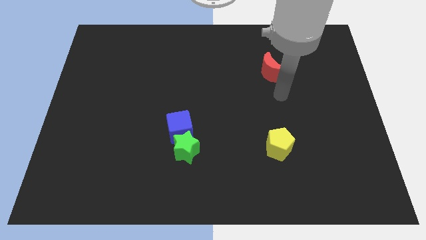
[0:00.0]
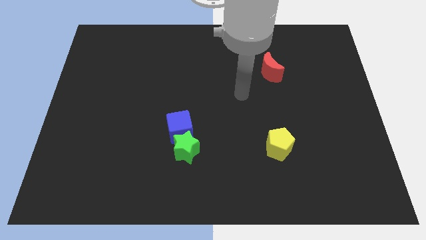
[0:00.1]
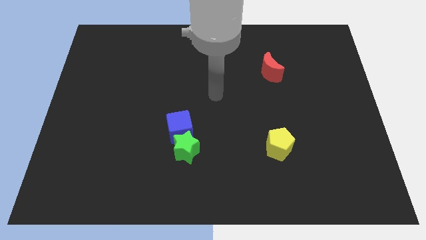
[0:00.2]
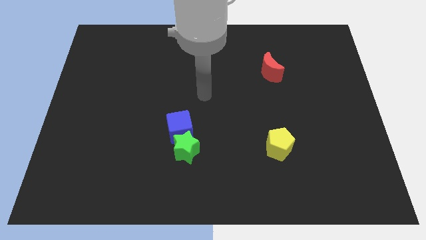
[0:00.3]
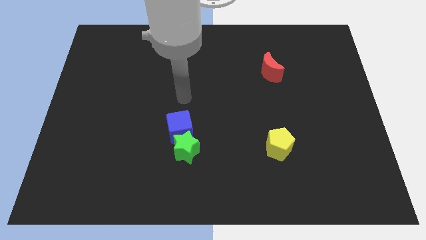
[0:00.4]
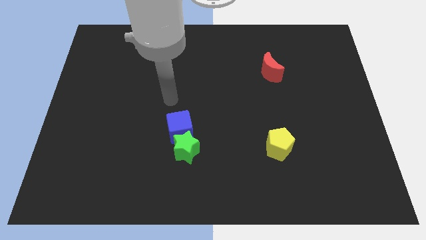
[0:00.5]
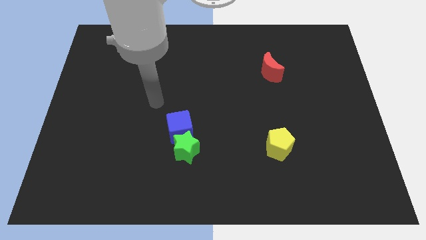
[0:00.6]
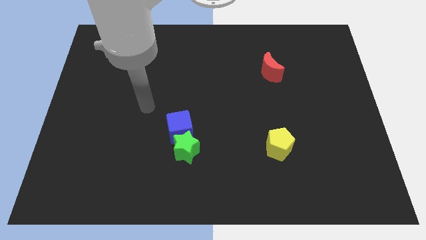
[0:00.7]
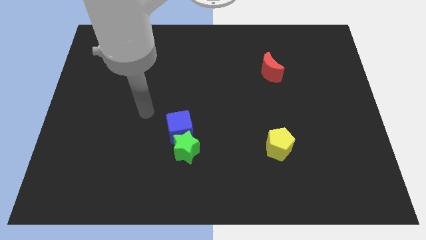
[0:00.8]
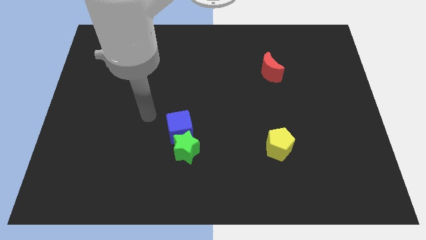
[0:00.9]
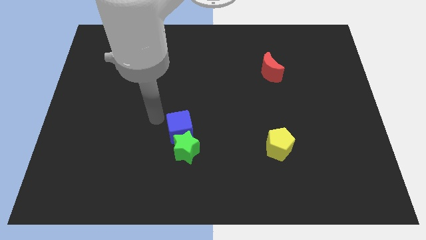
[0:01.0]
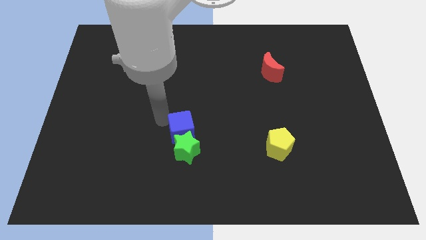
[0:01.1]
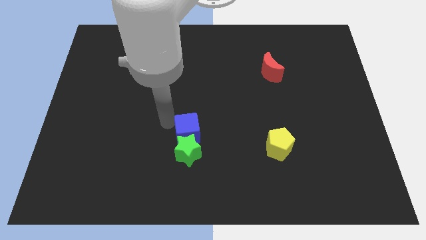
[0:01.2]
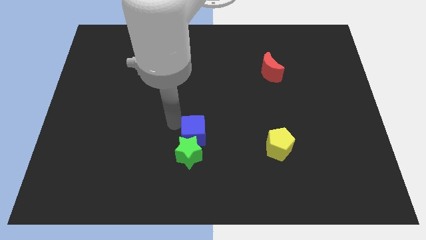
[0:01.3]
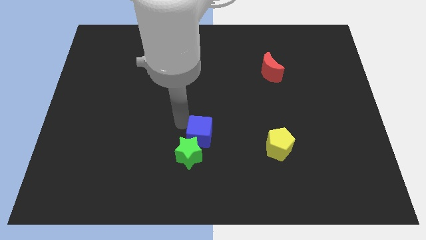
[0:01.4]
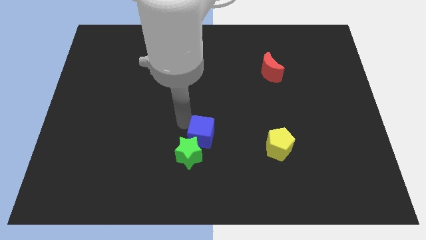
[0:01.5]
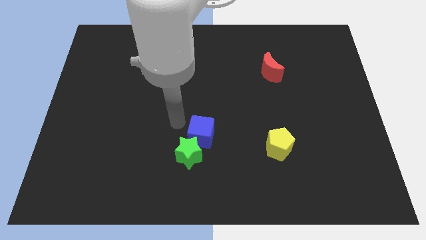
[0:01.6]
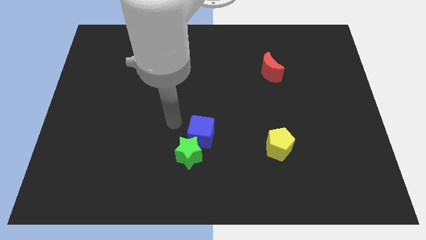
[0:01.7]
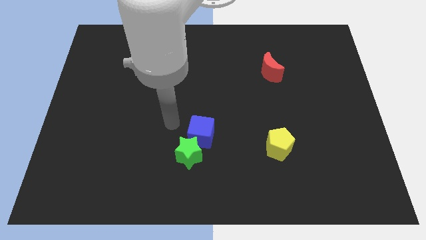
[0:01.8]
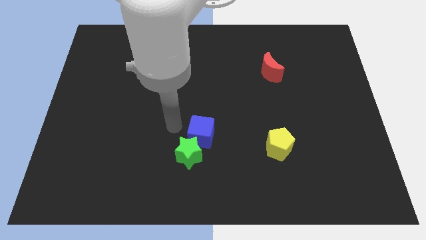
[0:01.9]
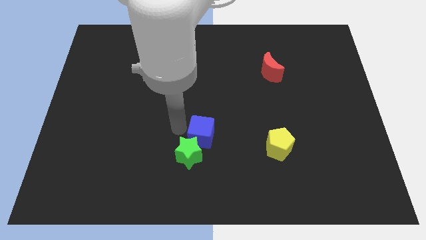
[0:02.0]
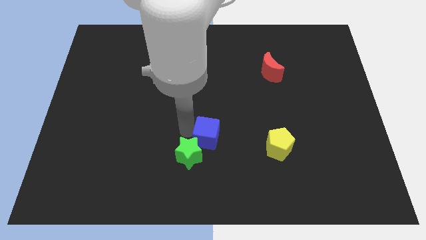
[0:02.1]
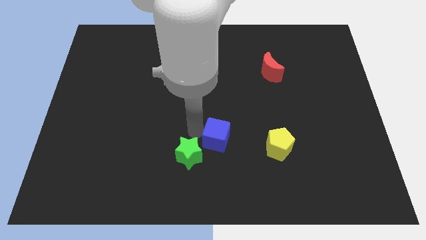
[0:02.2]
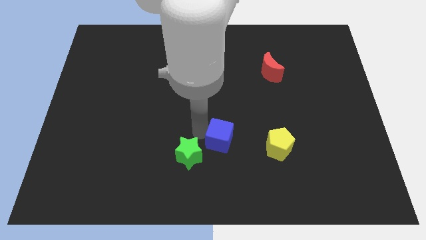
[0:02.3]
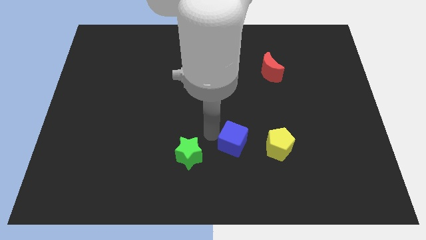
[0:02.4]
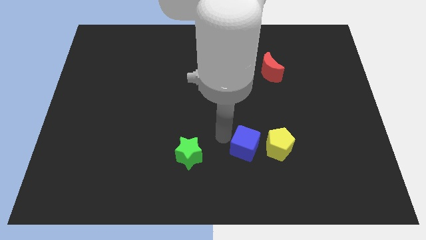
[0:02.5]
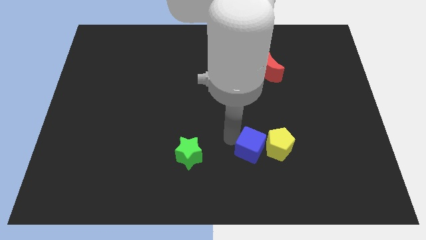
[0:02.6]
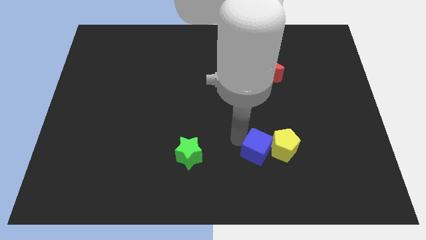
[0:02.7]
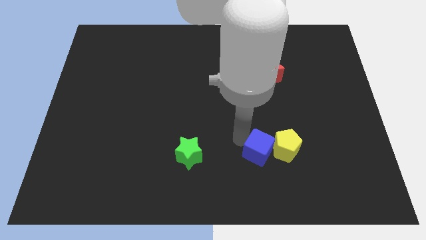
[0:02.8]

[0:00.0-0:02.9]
move the blue block towards the yellow block

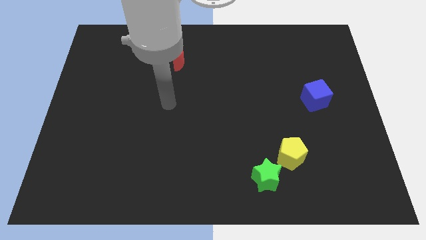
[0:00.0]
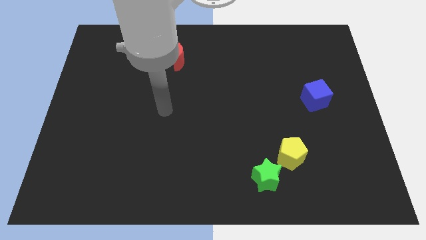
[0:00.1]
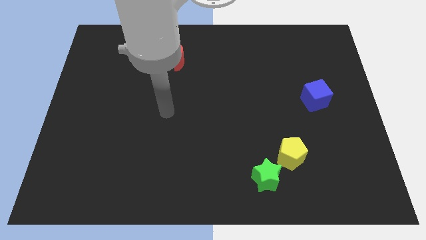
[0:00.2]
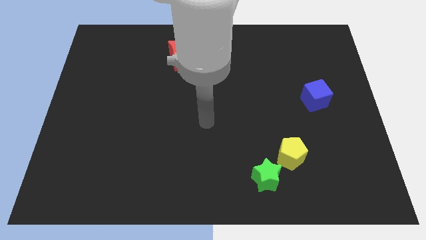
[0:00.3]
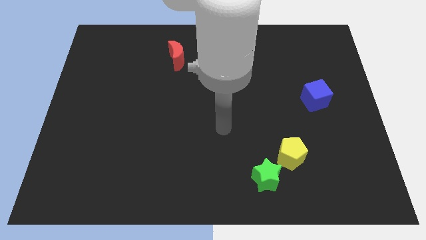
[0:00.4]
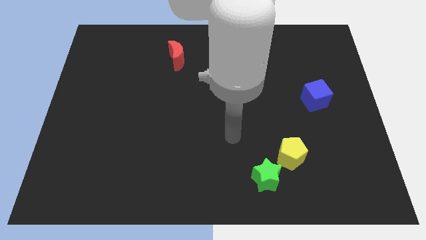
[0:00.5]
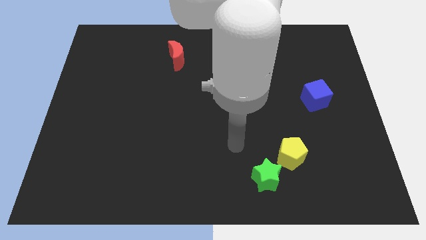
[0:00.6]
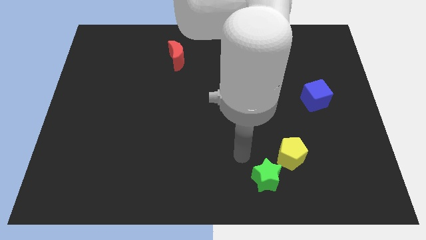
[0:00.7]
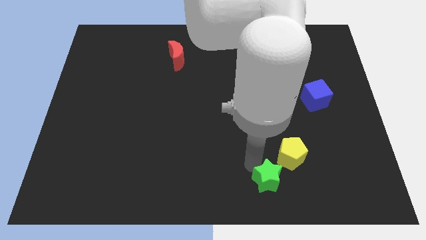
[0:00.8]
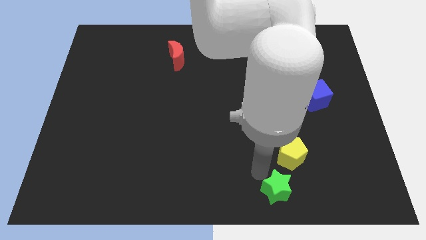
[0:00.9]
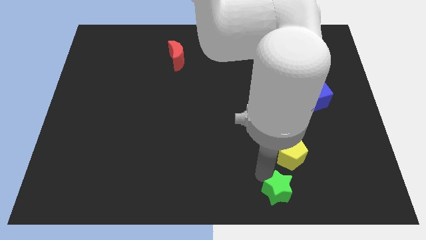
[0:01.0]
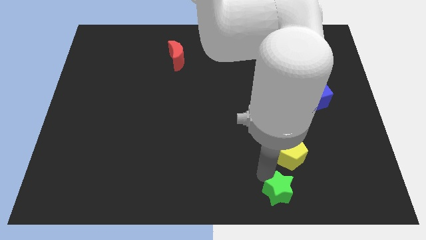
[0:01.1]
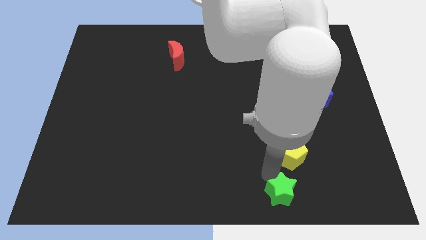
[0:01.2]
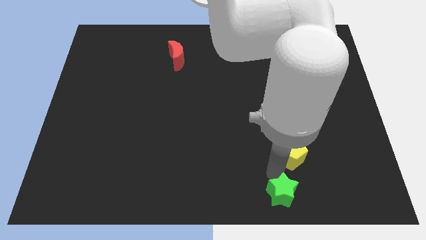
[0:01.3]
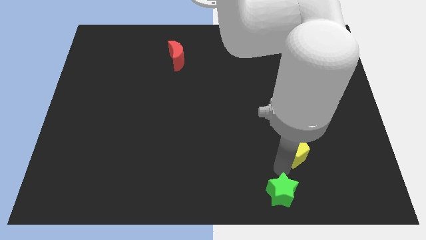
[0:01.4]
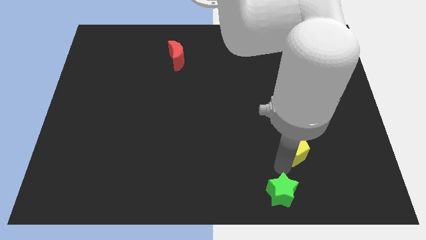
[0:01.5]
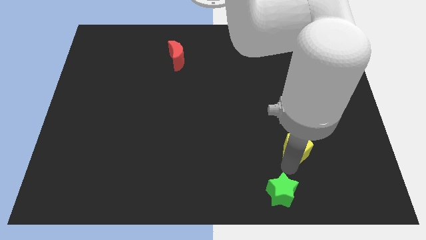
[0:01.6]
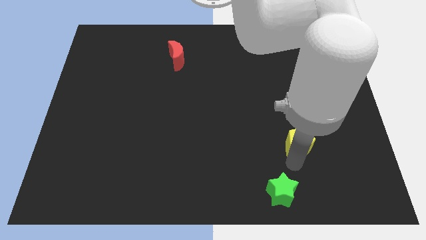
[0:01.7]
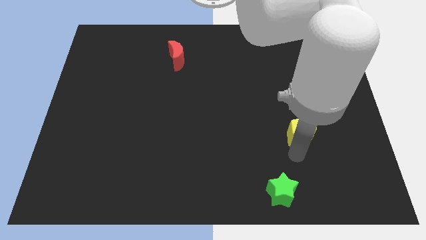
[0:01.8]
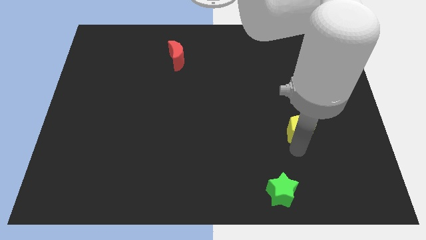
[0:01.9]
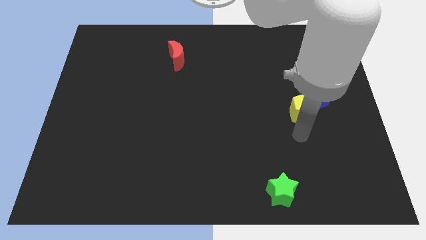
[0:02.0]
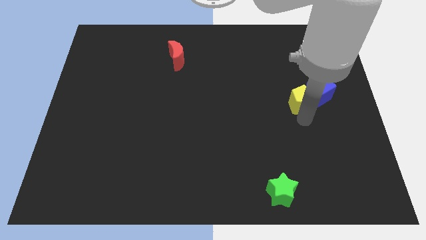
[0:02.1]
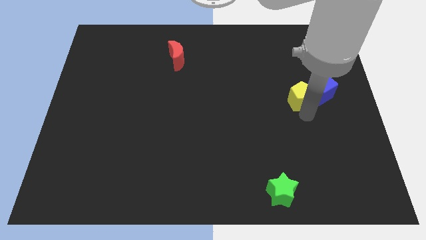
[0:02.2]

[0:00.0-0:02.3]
move the pentagon next to the blue block

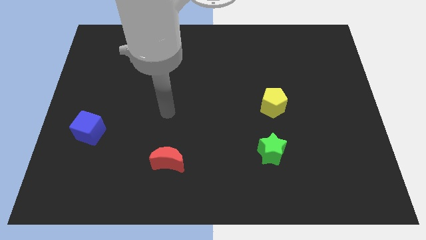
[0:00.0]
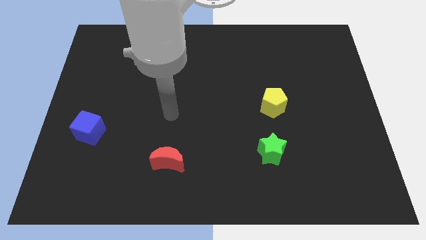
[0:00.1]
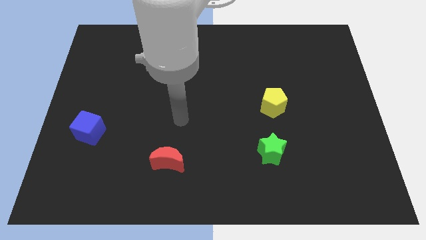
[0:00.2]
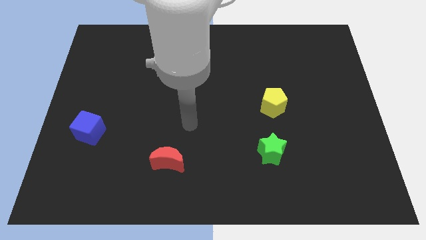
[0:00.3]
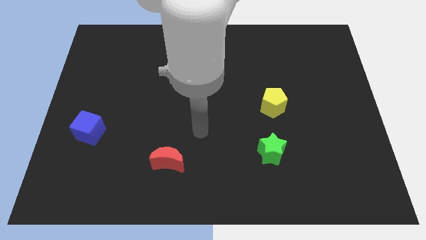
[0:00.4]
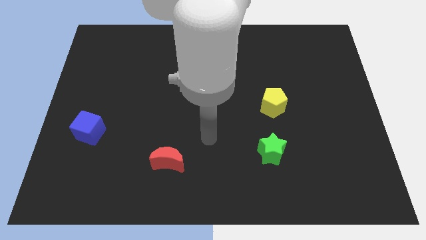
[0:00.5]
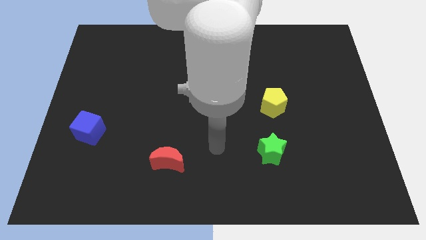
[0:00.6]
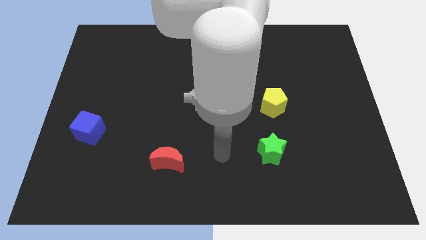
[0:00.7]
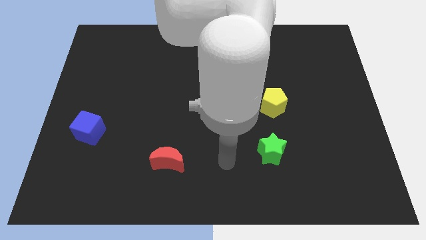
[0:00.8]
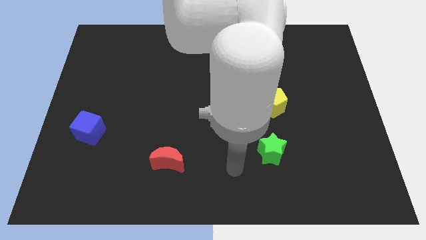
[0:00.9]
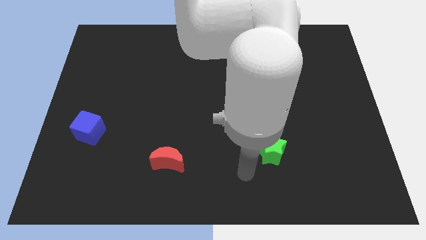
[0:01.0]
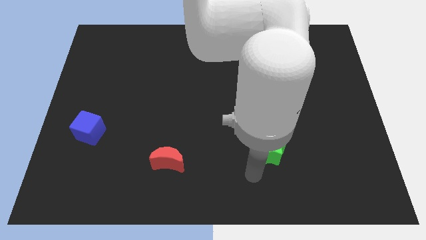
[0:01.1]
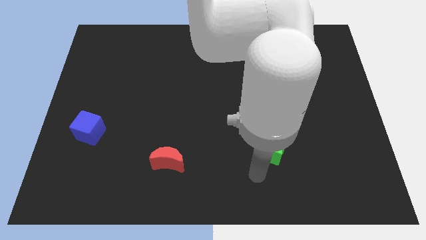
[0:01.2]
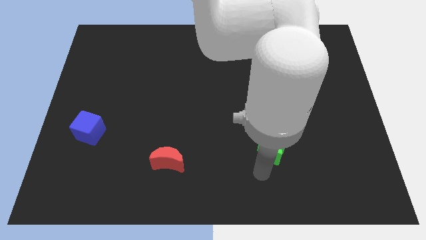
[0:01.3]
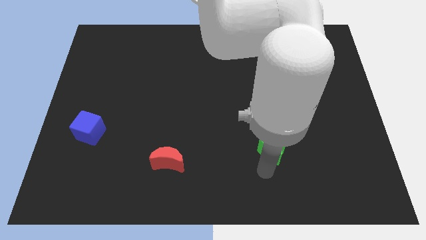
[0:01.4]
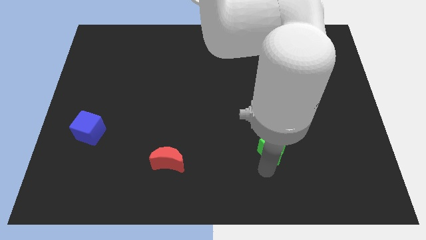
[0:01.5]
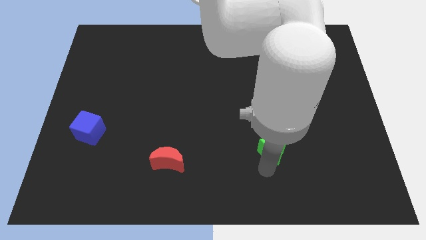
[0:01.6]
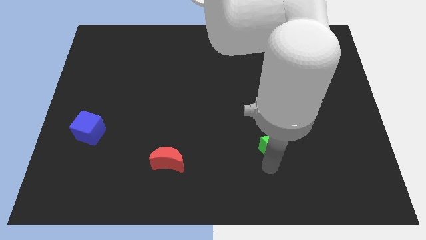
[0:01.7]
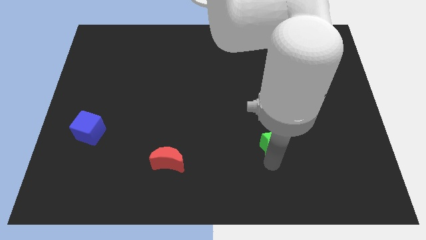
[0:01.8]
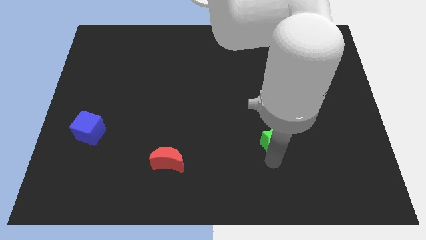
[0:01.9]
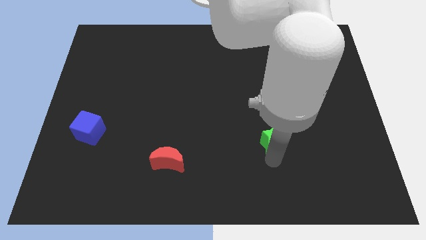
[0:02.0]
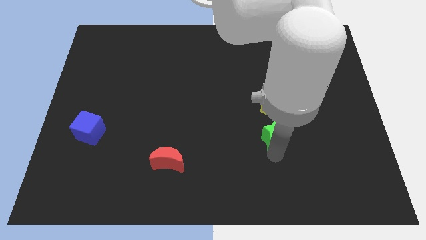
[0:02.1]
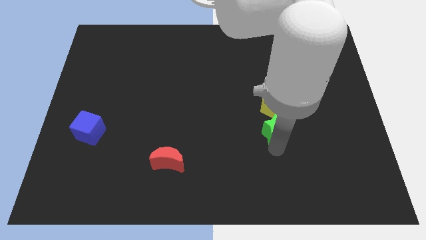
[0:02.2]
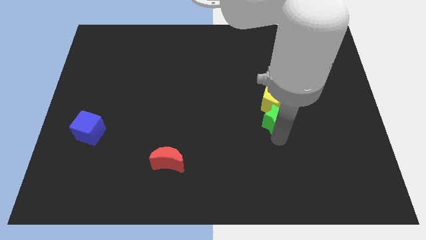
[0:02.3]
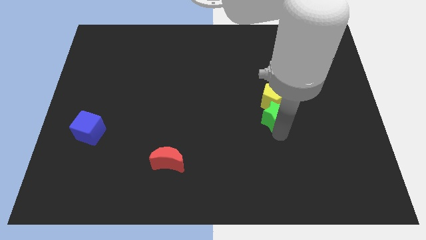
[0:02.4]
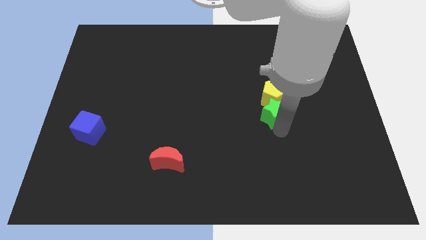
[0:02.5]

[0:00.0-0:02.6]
push the green block close to the pentagon

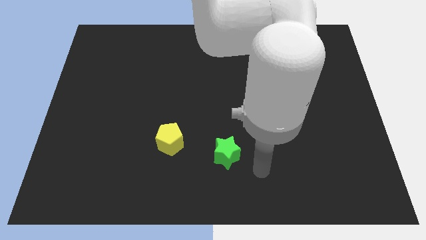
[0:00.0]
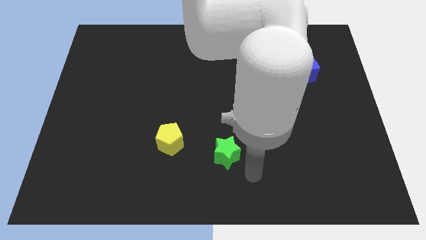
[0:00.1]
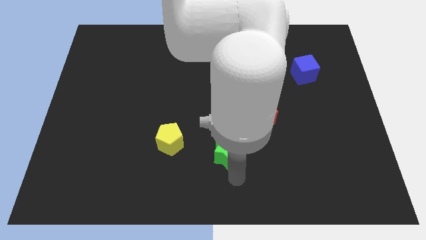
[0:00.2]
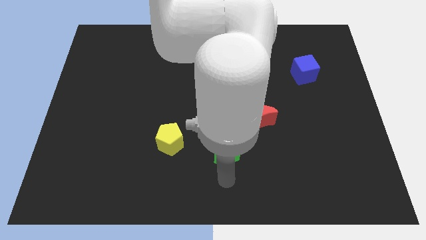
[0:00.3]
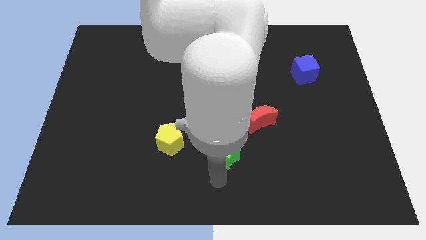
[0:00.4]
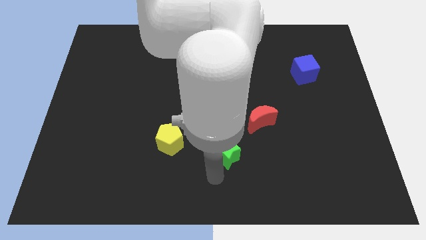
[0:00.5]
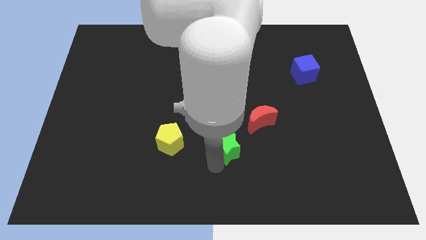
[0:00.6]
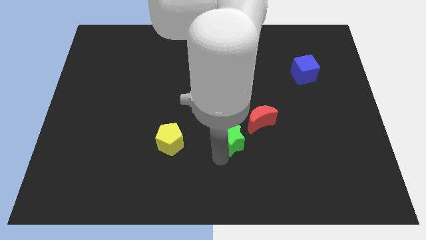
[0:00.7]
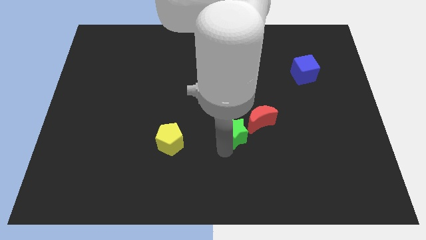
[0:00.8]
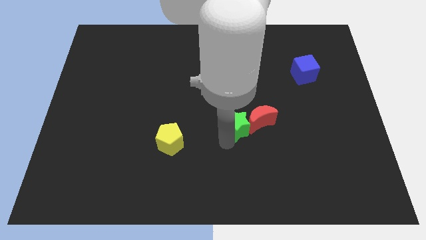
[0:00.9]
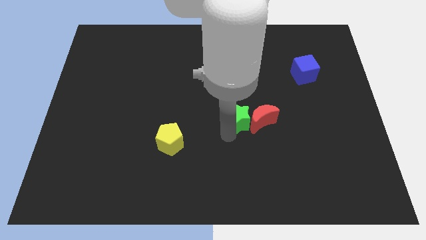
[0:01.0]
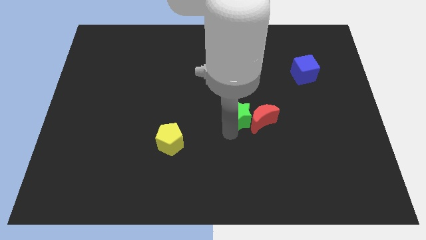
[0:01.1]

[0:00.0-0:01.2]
push the green star towards the red moon
